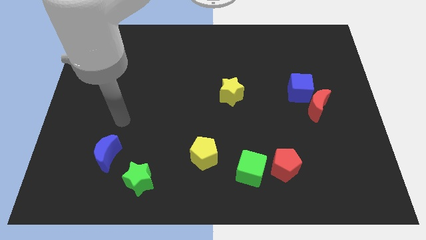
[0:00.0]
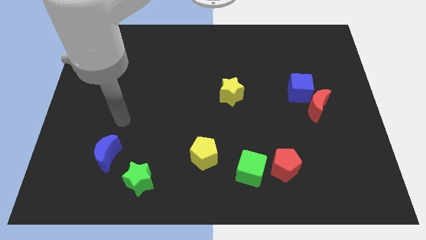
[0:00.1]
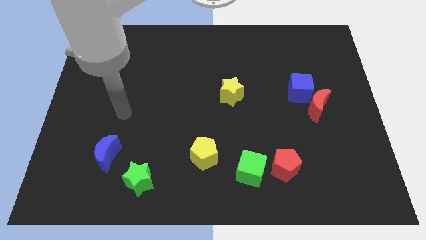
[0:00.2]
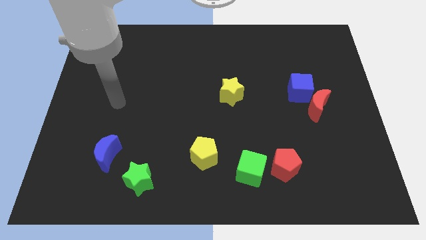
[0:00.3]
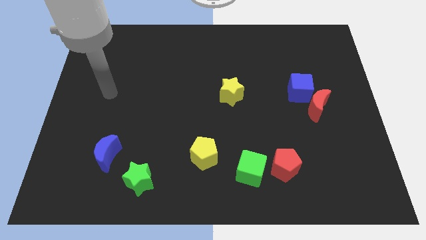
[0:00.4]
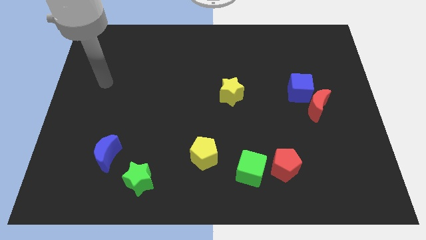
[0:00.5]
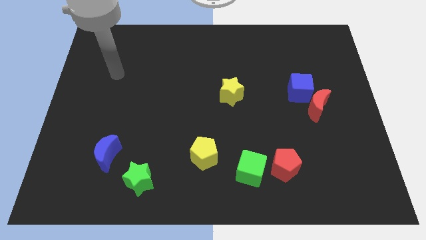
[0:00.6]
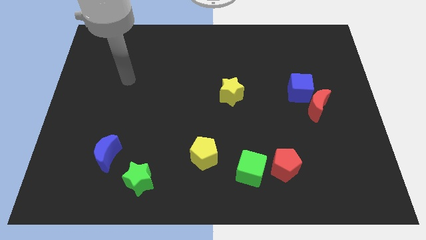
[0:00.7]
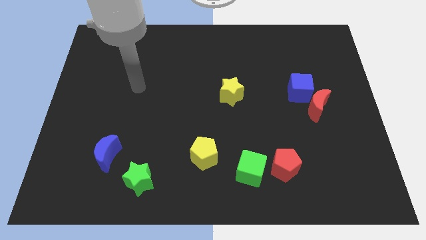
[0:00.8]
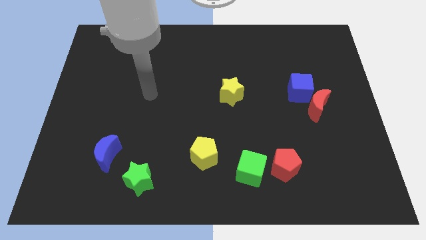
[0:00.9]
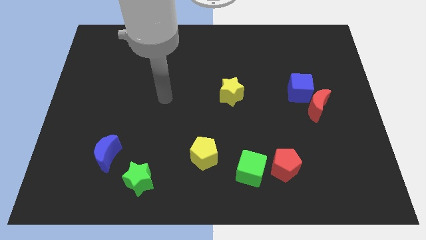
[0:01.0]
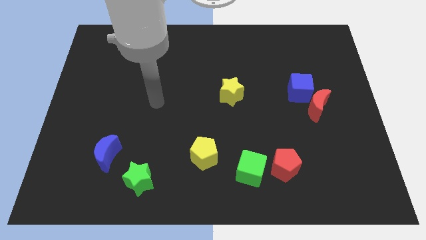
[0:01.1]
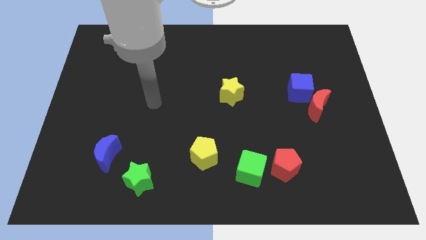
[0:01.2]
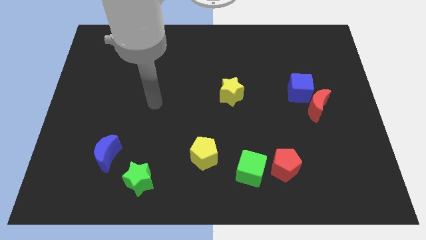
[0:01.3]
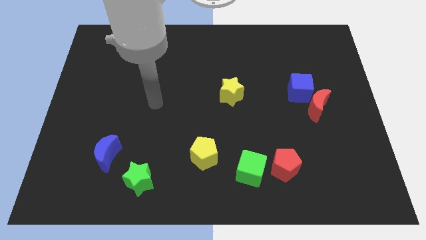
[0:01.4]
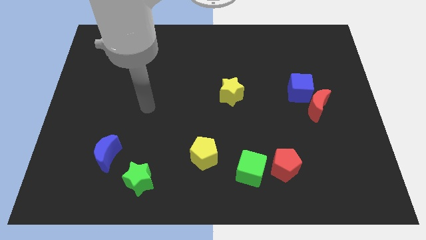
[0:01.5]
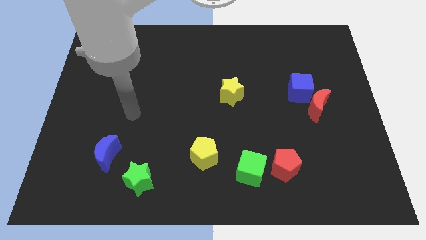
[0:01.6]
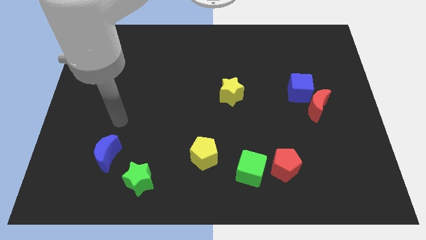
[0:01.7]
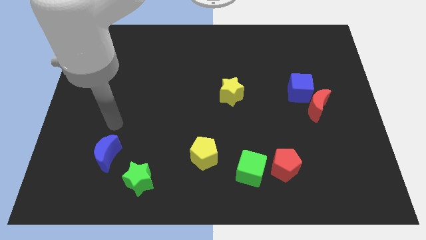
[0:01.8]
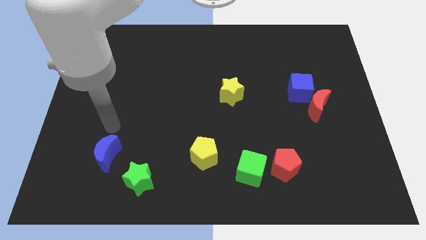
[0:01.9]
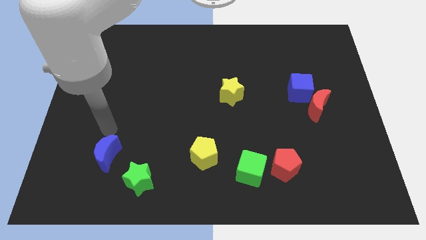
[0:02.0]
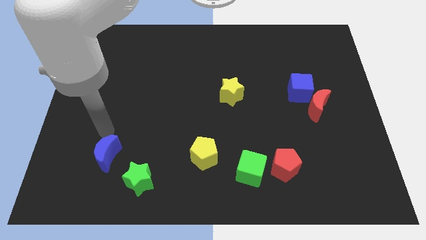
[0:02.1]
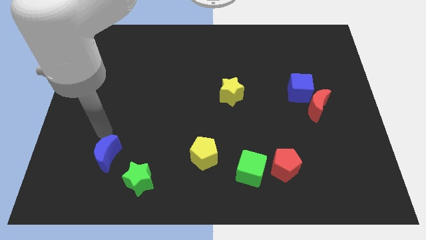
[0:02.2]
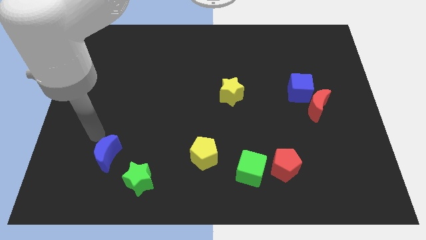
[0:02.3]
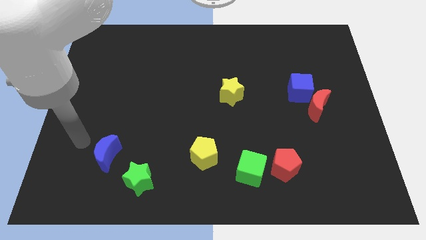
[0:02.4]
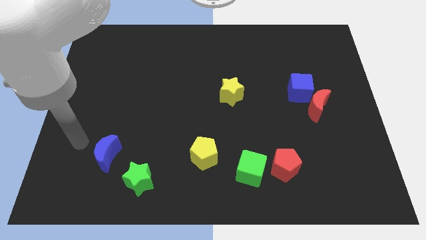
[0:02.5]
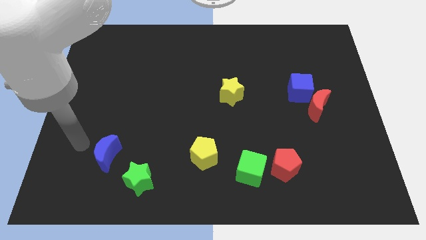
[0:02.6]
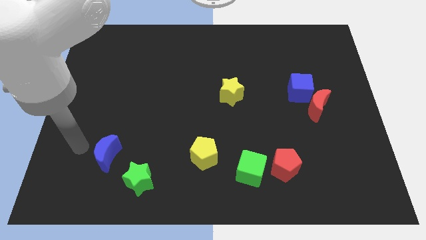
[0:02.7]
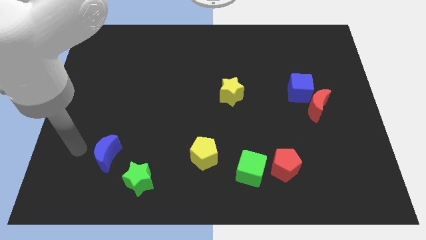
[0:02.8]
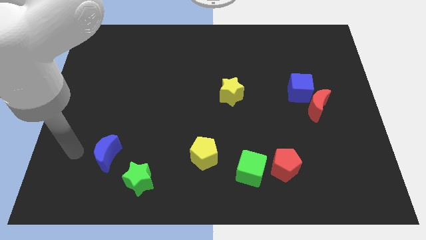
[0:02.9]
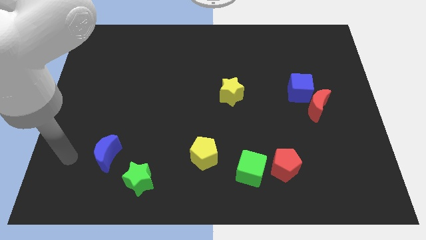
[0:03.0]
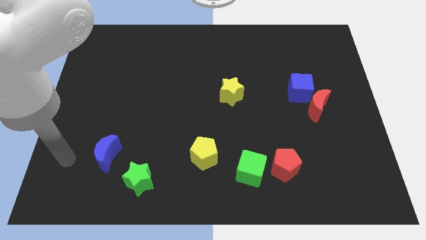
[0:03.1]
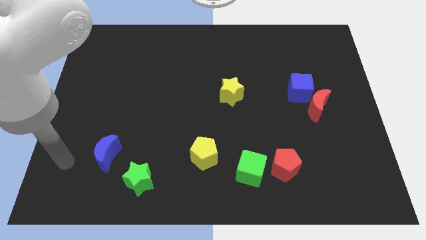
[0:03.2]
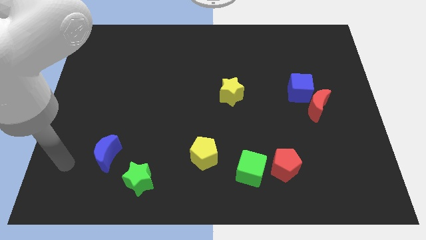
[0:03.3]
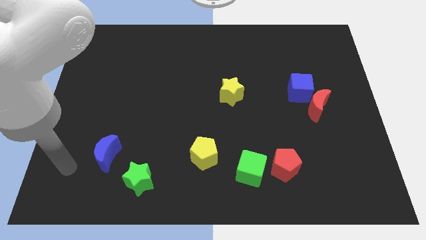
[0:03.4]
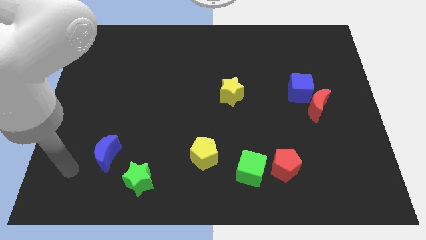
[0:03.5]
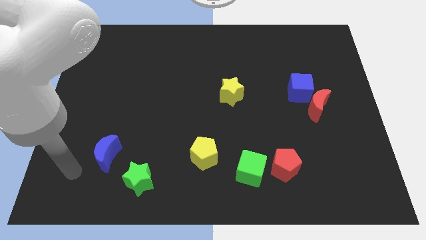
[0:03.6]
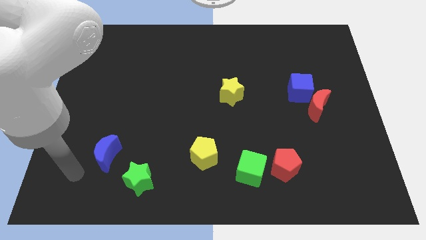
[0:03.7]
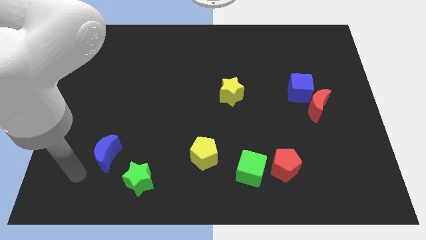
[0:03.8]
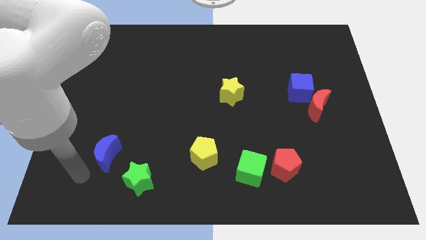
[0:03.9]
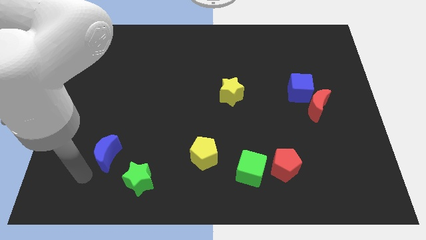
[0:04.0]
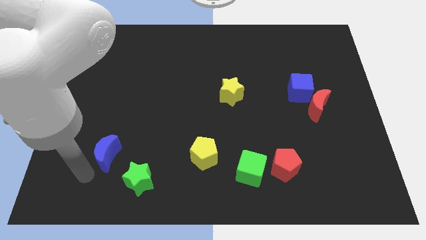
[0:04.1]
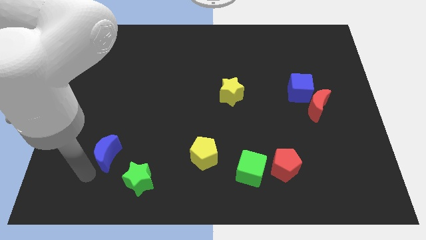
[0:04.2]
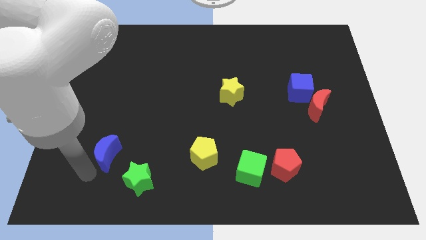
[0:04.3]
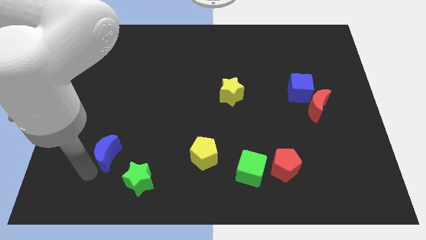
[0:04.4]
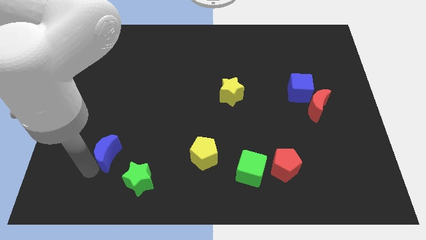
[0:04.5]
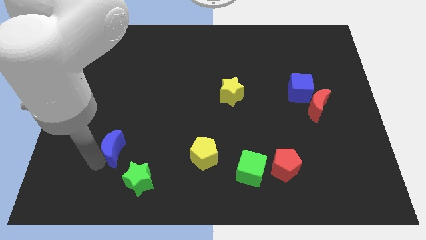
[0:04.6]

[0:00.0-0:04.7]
point your hand at the bottom left side of the blue moon

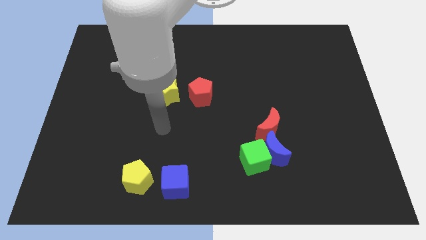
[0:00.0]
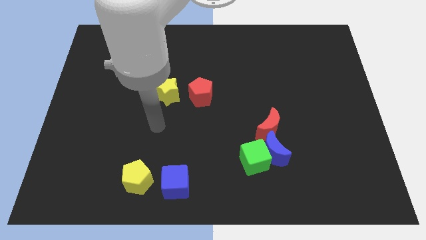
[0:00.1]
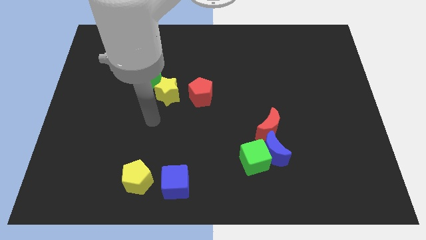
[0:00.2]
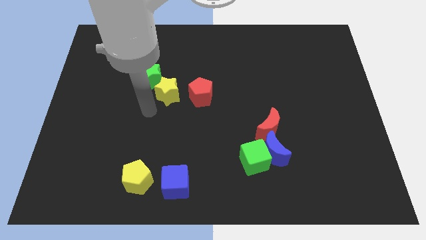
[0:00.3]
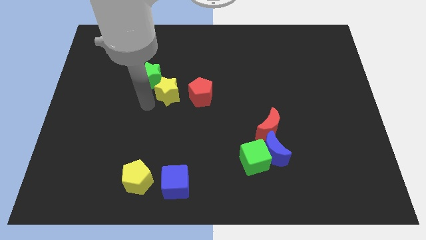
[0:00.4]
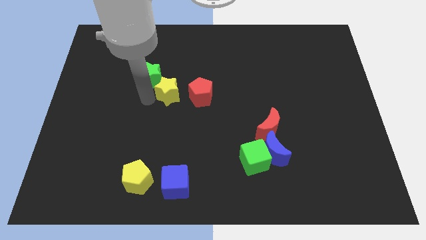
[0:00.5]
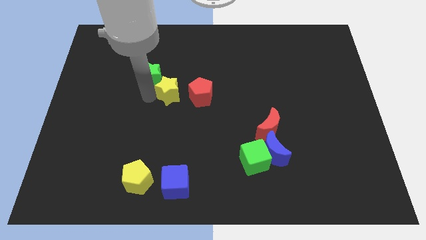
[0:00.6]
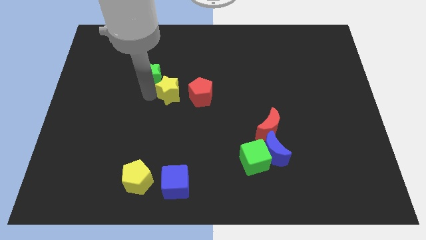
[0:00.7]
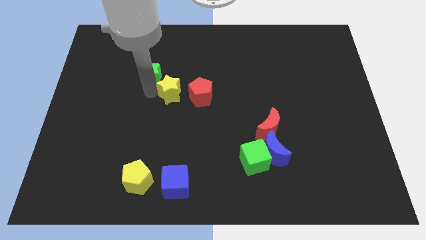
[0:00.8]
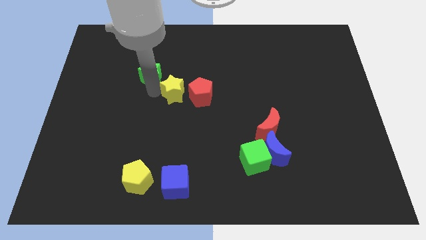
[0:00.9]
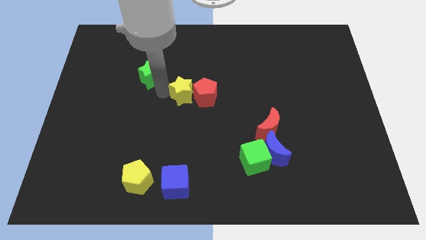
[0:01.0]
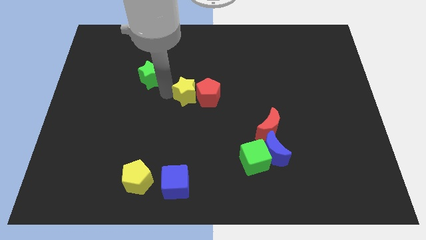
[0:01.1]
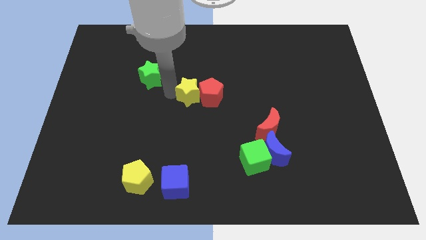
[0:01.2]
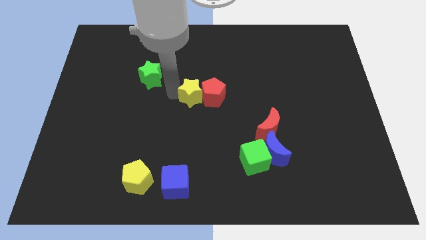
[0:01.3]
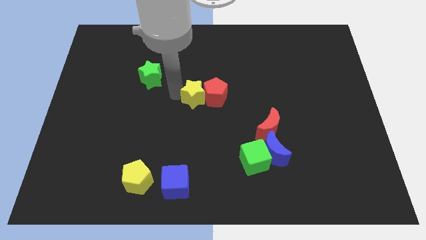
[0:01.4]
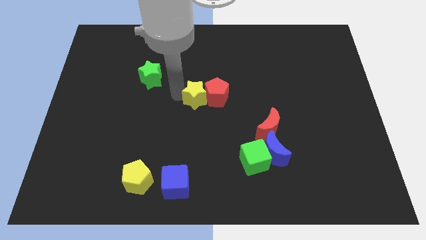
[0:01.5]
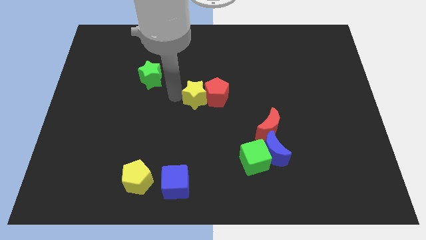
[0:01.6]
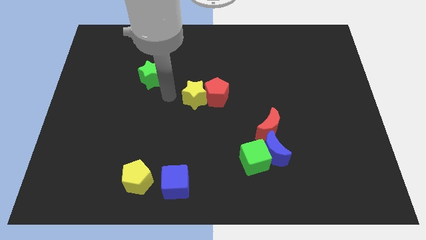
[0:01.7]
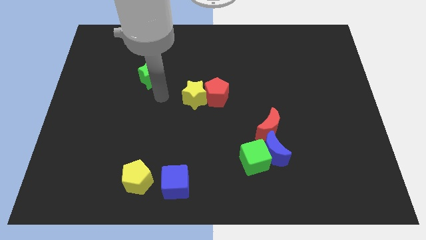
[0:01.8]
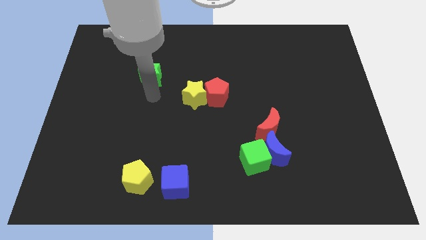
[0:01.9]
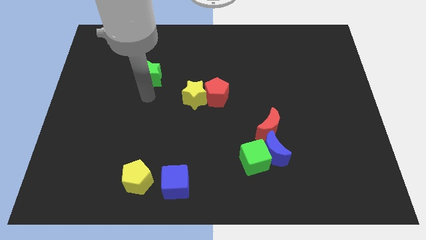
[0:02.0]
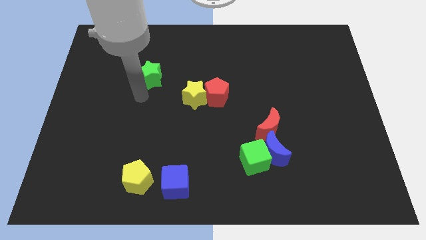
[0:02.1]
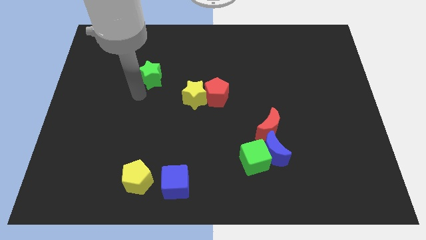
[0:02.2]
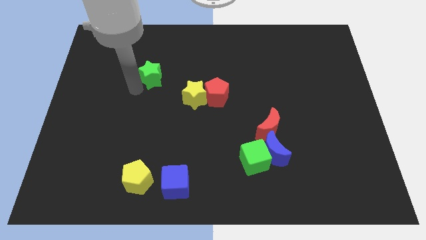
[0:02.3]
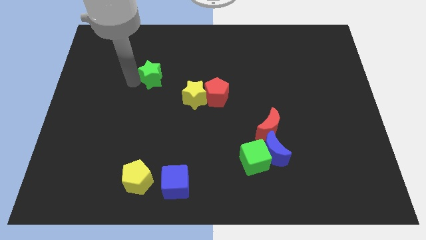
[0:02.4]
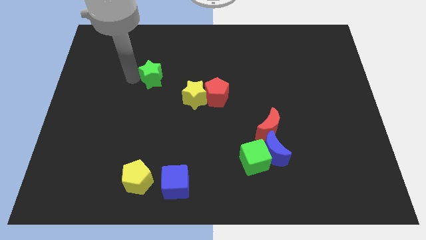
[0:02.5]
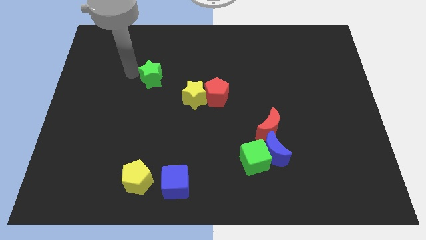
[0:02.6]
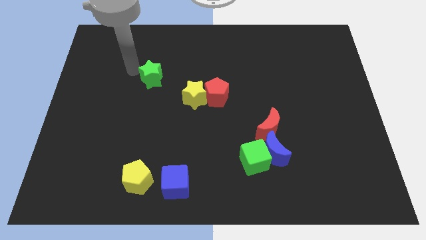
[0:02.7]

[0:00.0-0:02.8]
move the yellow star left side of the red pentagon

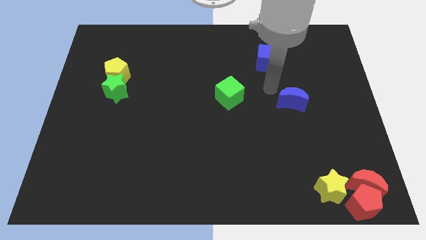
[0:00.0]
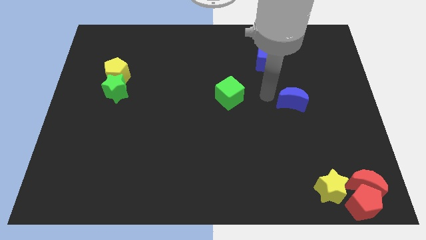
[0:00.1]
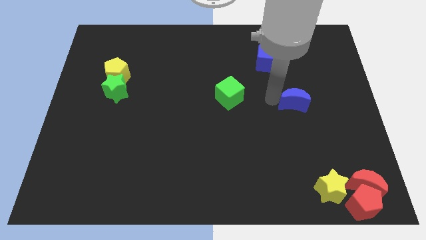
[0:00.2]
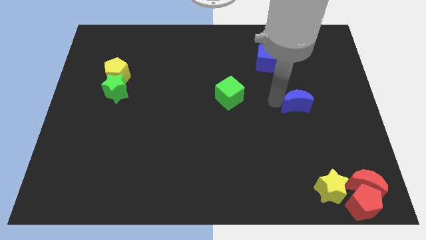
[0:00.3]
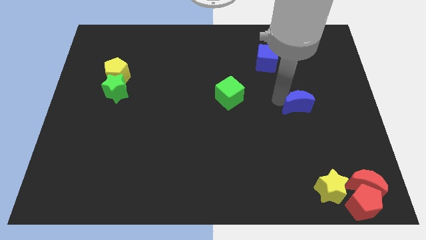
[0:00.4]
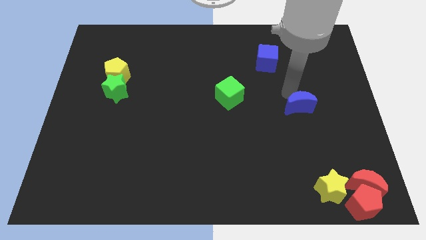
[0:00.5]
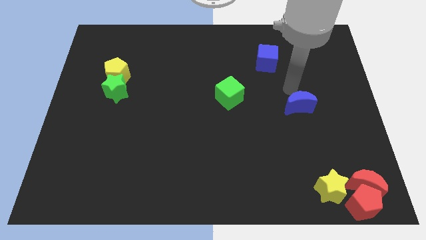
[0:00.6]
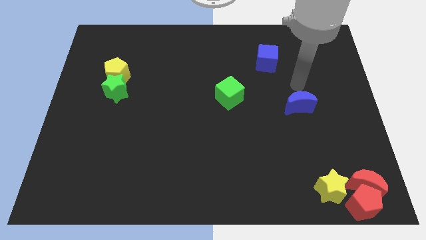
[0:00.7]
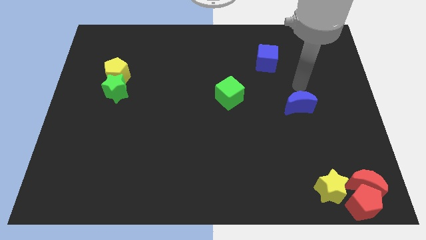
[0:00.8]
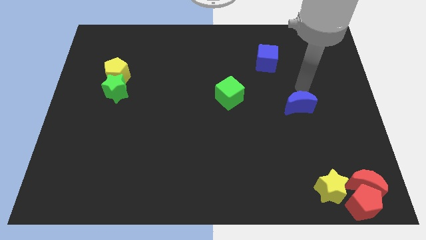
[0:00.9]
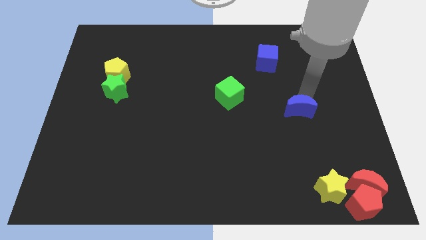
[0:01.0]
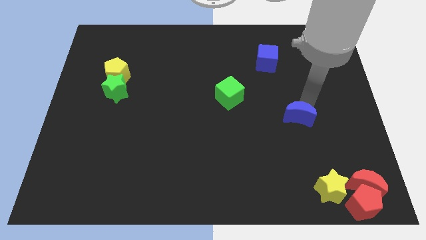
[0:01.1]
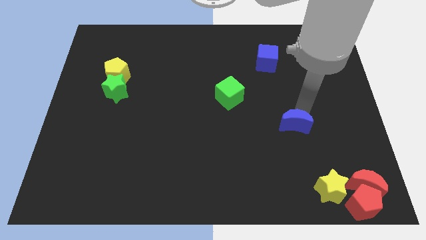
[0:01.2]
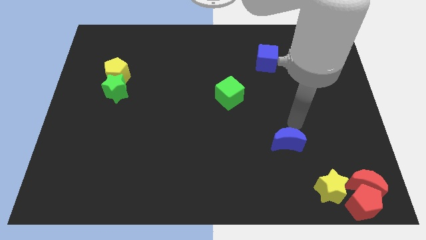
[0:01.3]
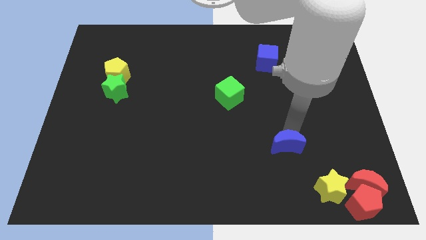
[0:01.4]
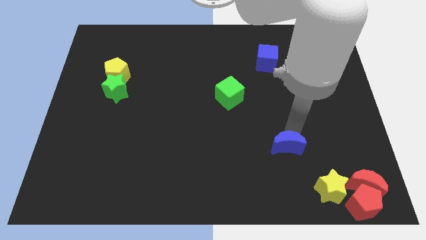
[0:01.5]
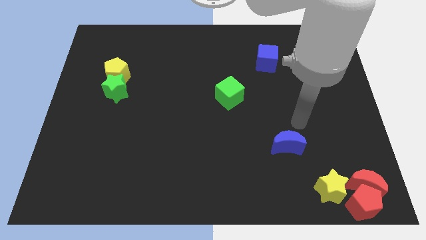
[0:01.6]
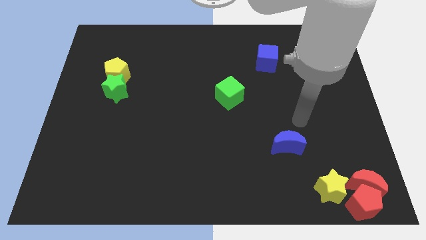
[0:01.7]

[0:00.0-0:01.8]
slightly push the blue moon downward
